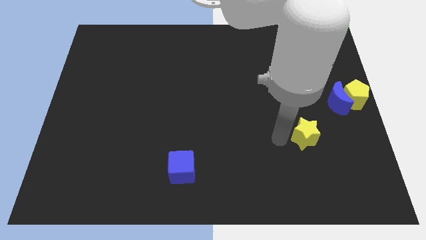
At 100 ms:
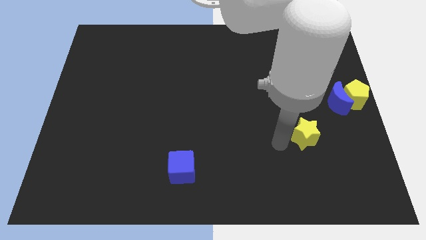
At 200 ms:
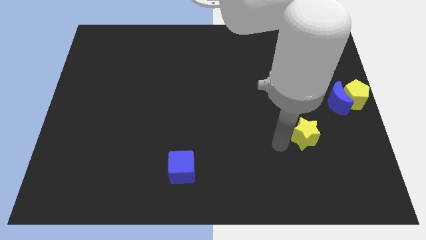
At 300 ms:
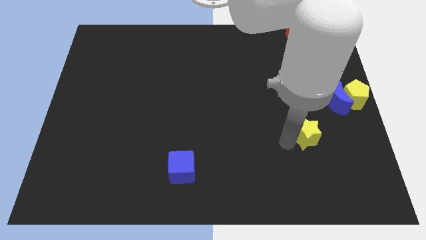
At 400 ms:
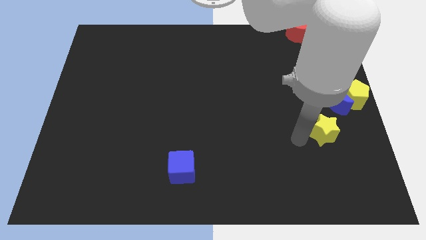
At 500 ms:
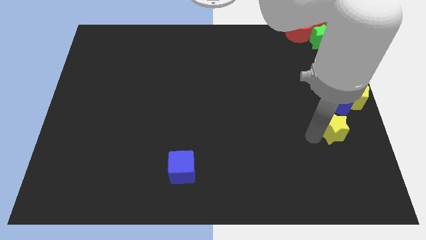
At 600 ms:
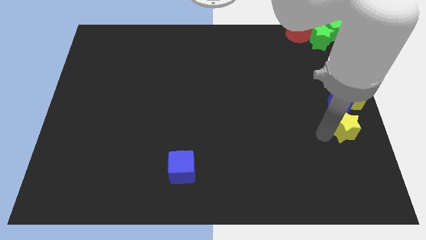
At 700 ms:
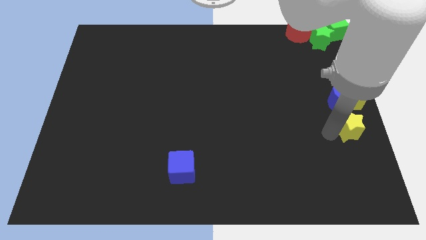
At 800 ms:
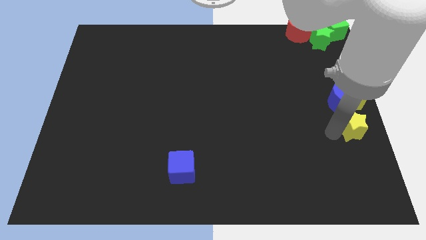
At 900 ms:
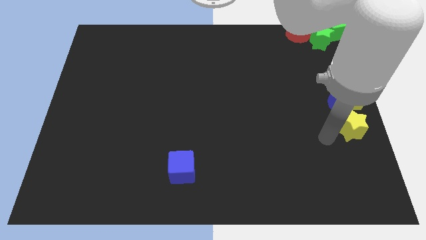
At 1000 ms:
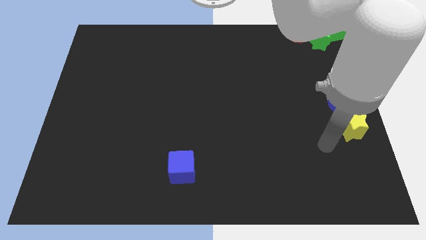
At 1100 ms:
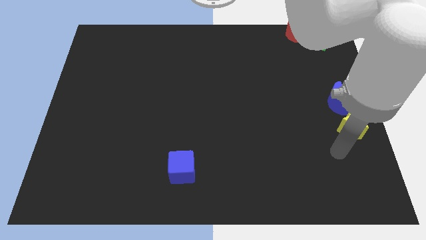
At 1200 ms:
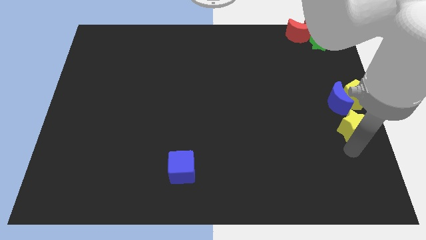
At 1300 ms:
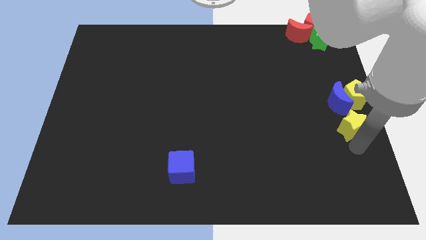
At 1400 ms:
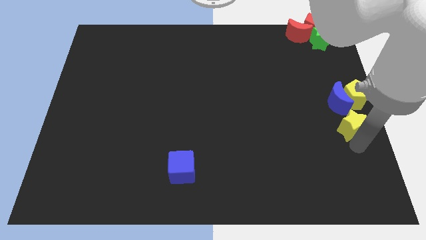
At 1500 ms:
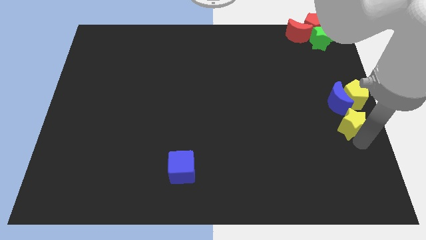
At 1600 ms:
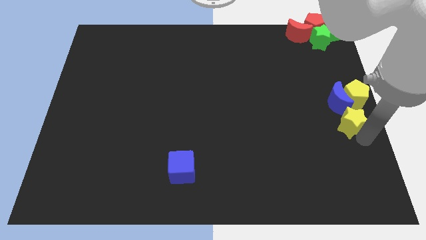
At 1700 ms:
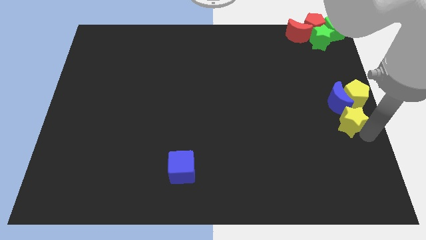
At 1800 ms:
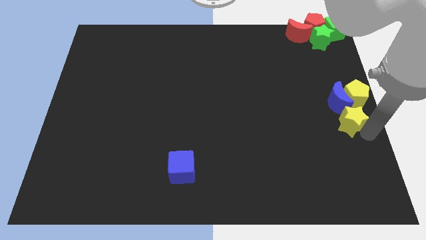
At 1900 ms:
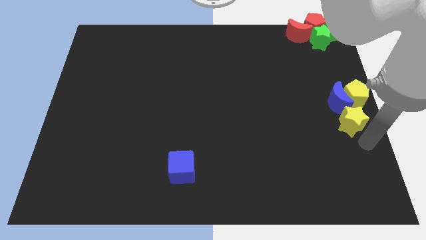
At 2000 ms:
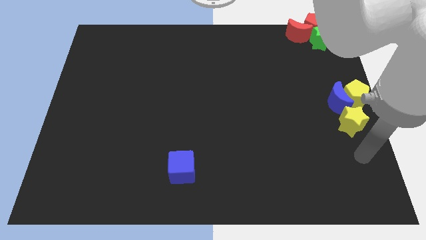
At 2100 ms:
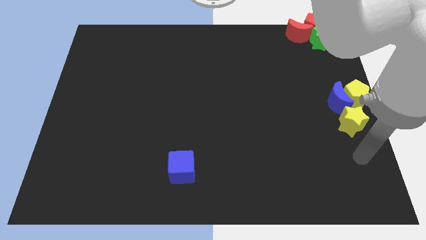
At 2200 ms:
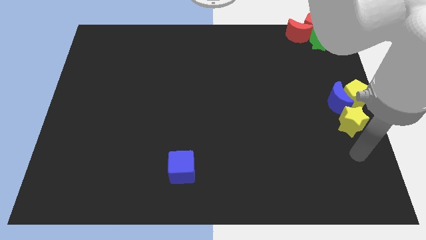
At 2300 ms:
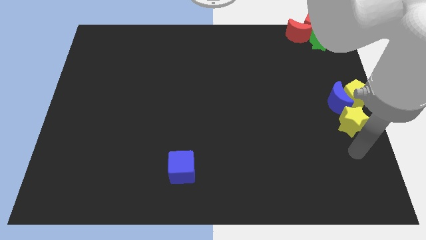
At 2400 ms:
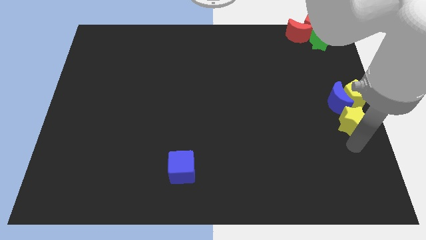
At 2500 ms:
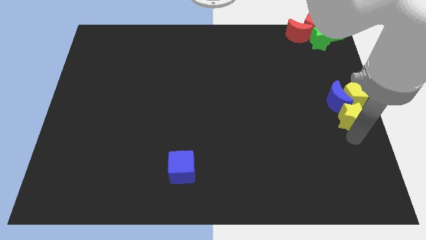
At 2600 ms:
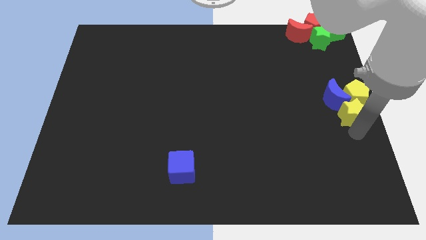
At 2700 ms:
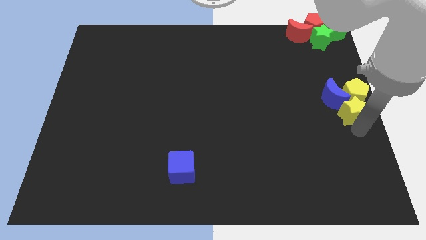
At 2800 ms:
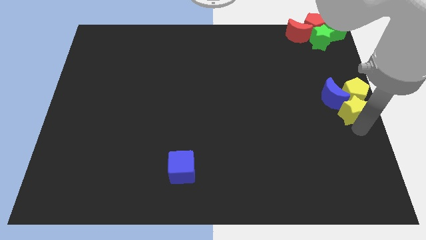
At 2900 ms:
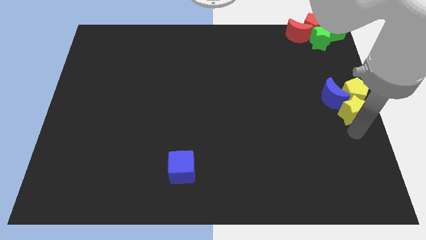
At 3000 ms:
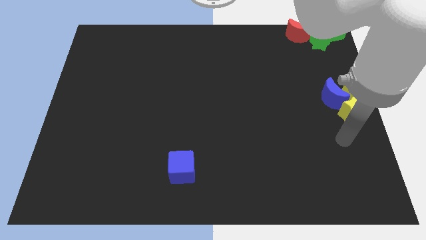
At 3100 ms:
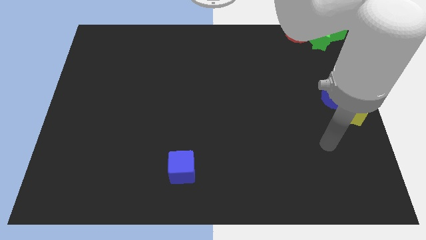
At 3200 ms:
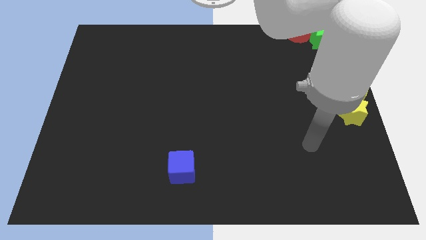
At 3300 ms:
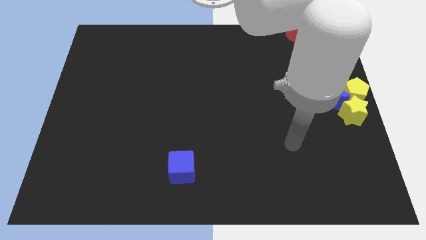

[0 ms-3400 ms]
place yellow star at the bottom of blue moon

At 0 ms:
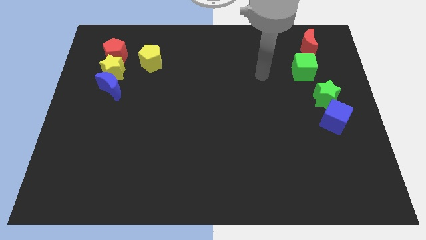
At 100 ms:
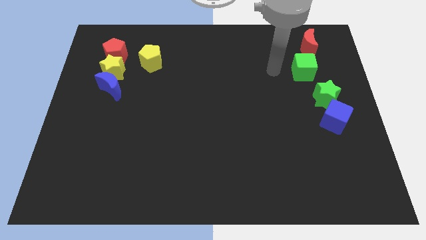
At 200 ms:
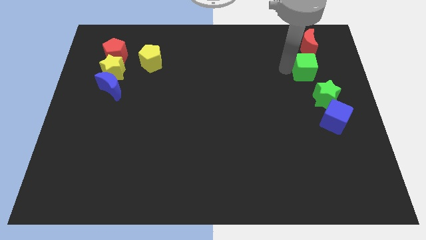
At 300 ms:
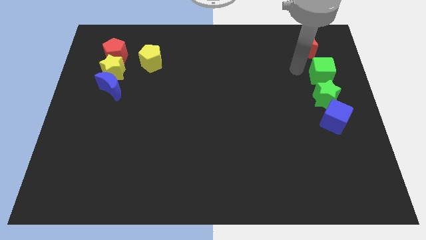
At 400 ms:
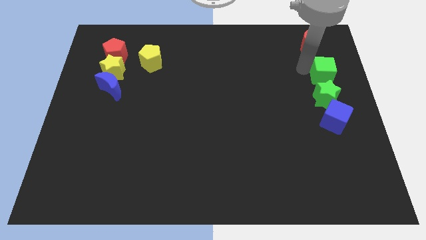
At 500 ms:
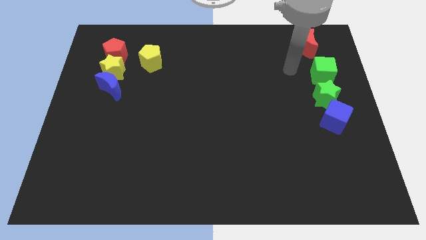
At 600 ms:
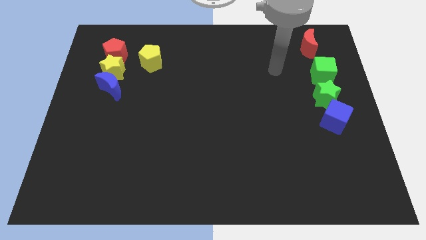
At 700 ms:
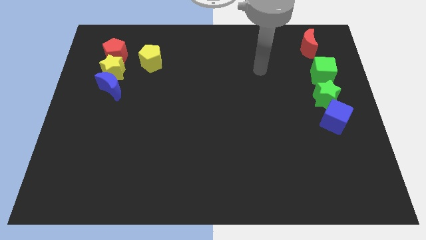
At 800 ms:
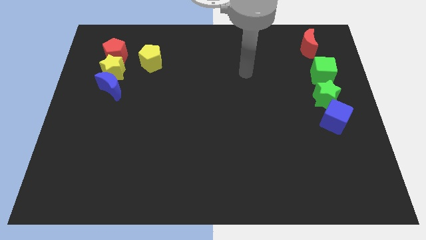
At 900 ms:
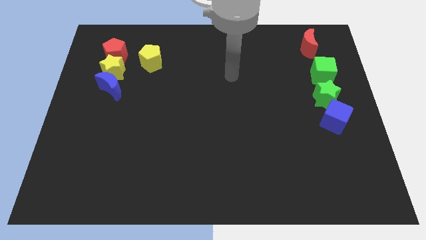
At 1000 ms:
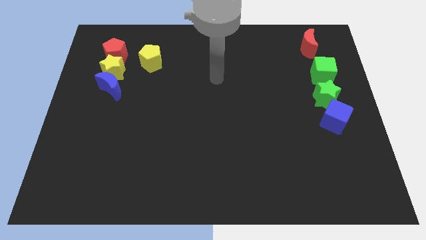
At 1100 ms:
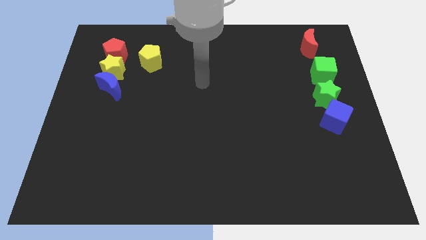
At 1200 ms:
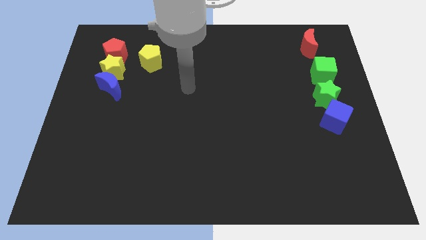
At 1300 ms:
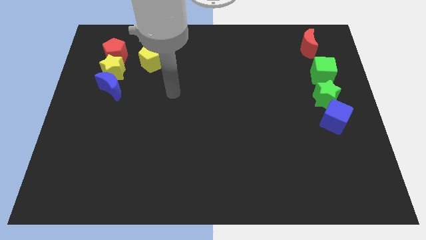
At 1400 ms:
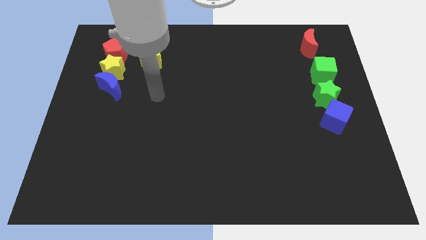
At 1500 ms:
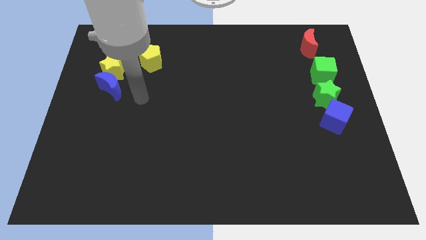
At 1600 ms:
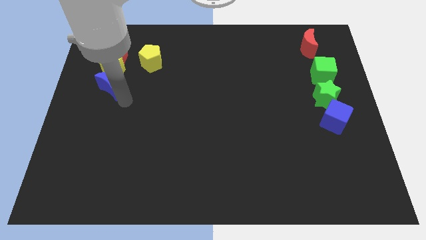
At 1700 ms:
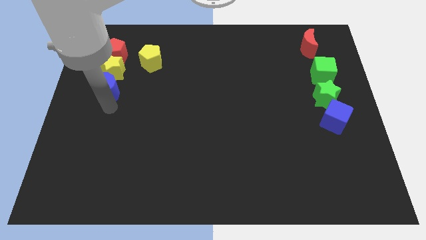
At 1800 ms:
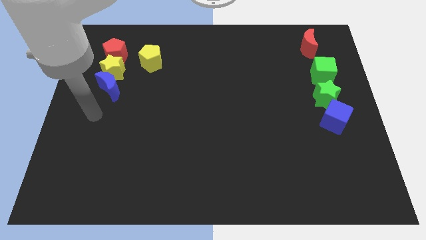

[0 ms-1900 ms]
move green cube above the green star

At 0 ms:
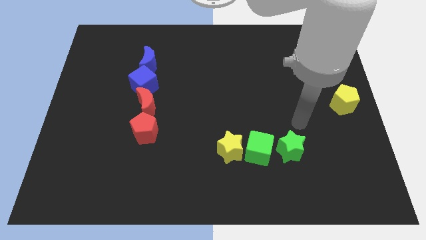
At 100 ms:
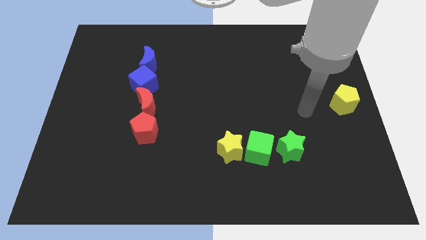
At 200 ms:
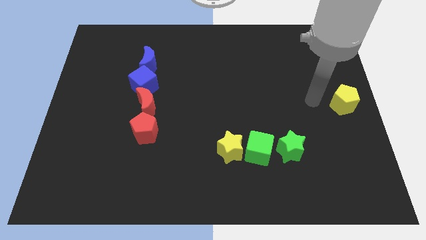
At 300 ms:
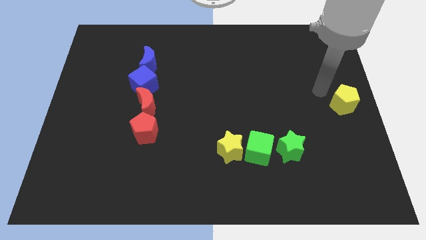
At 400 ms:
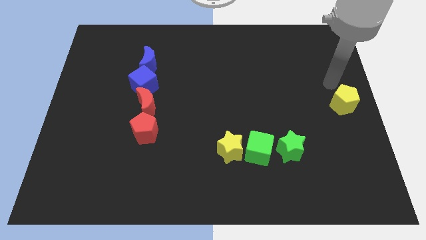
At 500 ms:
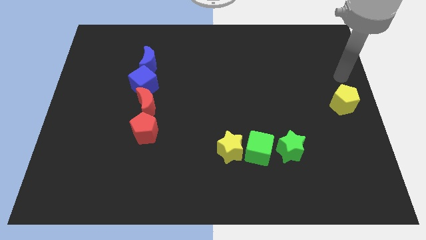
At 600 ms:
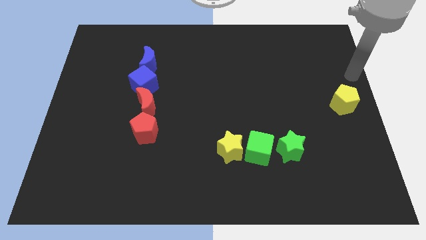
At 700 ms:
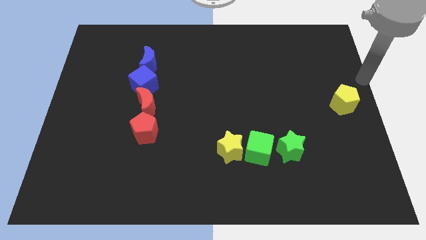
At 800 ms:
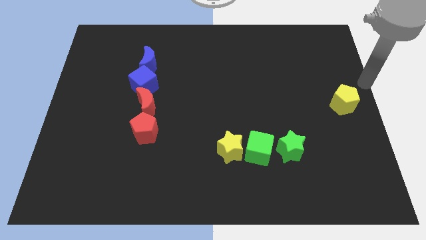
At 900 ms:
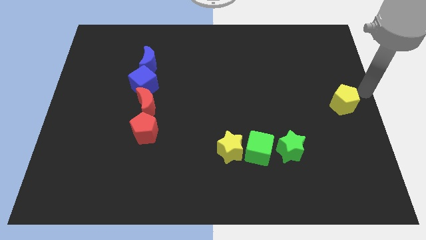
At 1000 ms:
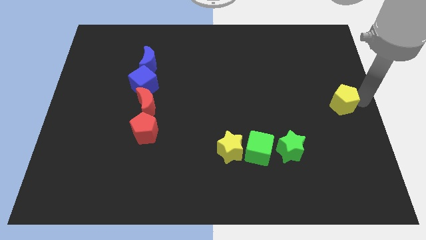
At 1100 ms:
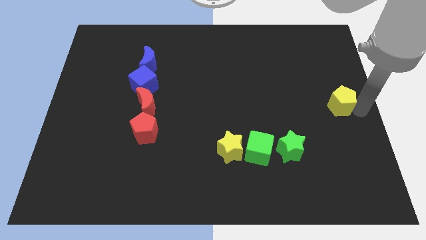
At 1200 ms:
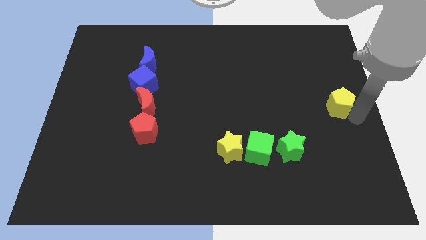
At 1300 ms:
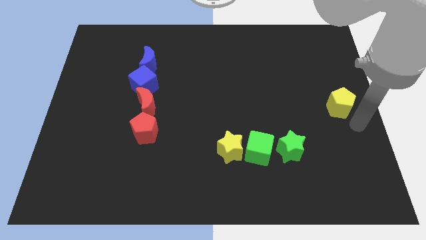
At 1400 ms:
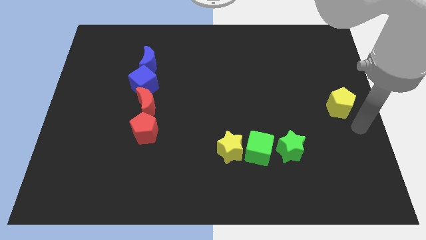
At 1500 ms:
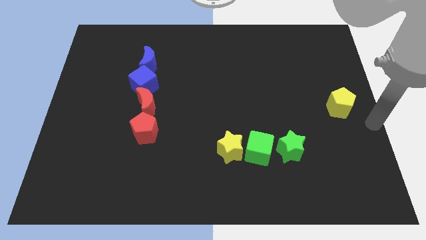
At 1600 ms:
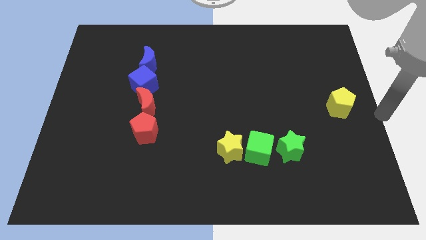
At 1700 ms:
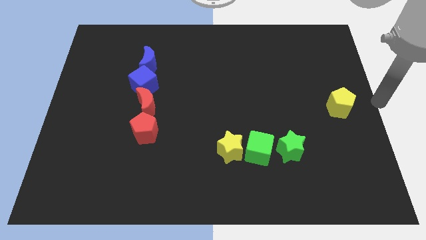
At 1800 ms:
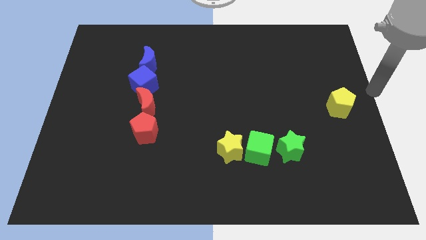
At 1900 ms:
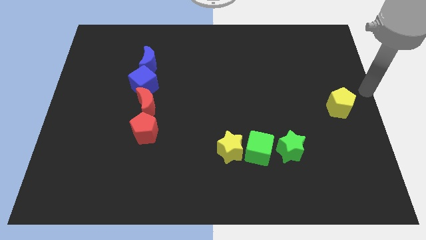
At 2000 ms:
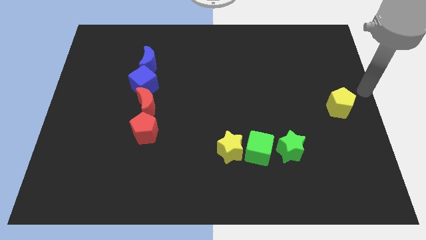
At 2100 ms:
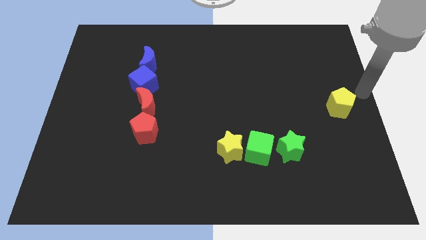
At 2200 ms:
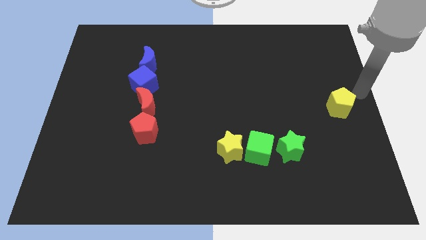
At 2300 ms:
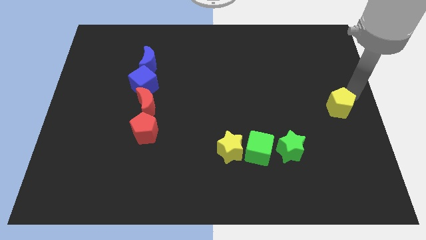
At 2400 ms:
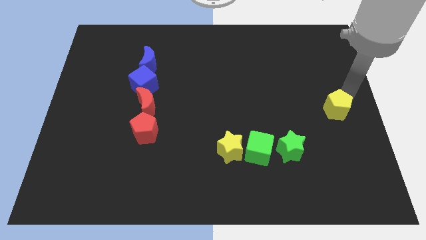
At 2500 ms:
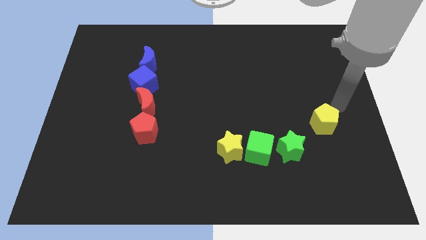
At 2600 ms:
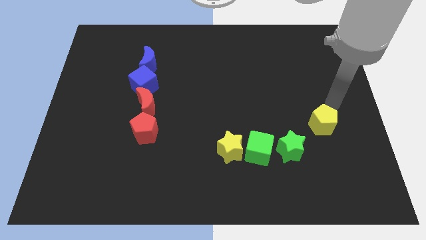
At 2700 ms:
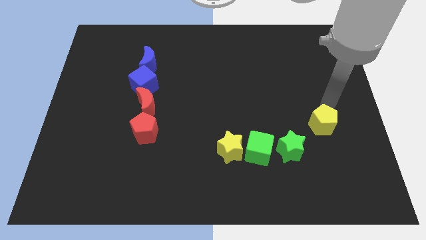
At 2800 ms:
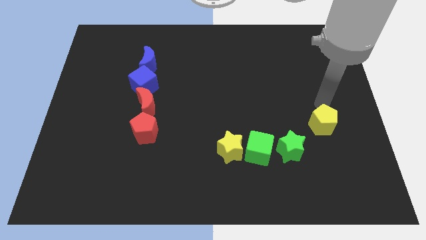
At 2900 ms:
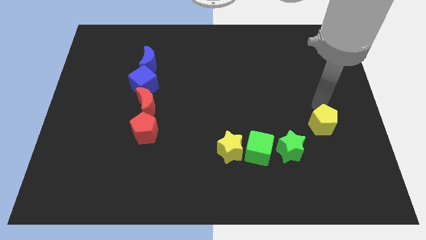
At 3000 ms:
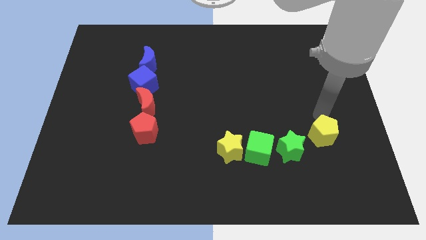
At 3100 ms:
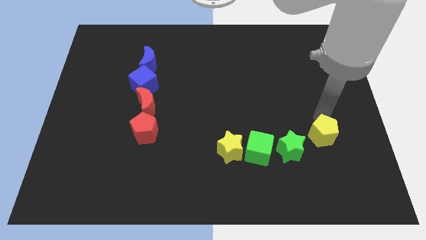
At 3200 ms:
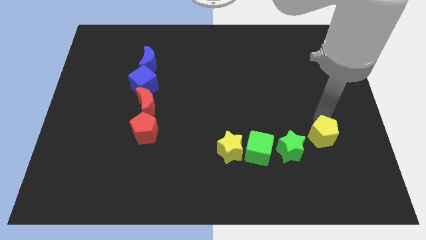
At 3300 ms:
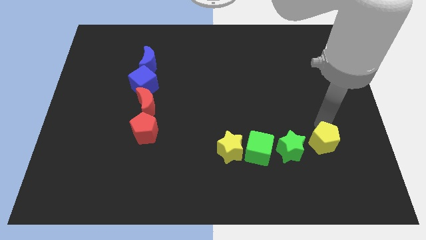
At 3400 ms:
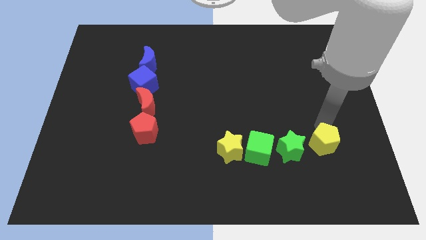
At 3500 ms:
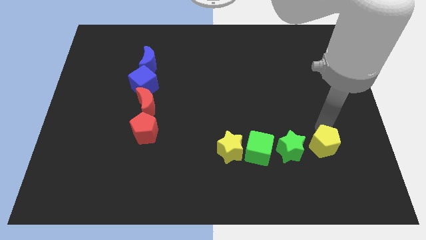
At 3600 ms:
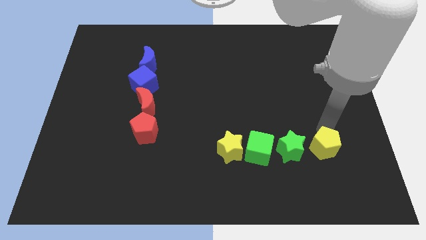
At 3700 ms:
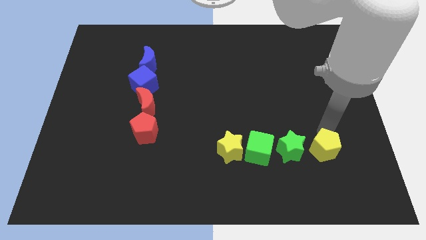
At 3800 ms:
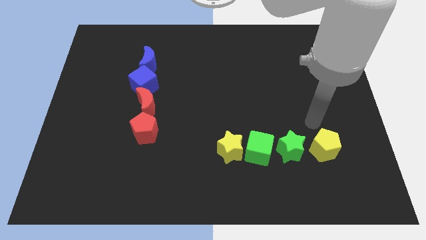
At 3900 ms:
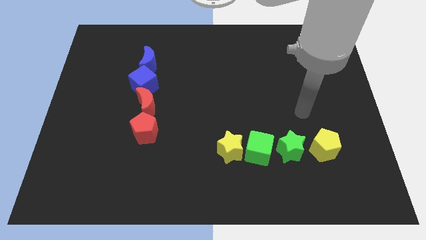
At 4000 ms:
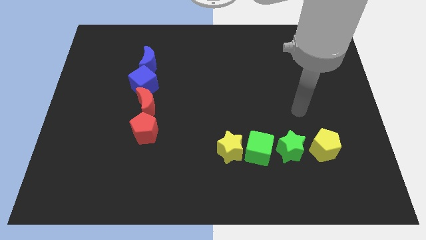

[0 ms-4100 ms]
push the yellow pentagon to the right of green star
